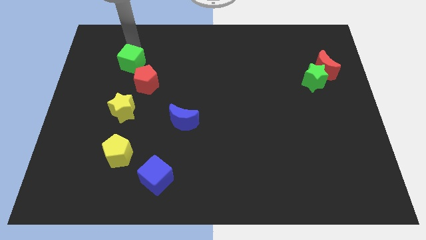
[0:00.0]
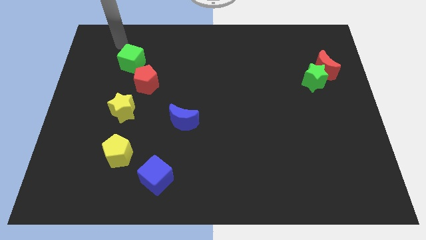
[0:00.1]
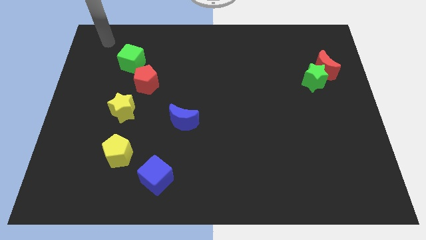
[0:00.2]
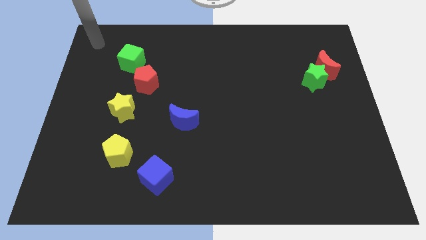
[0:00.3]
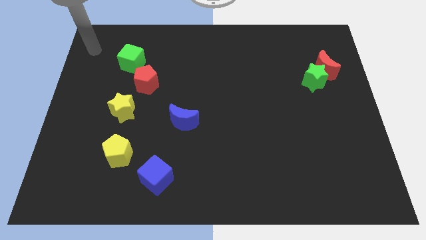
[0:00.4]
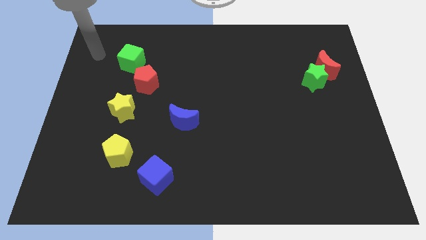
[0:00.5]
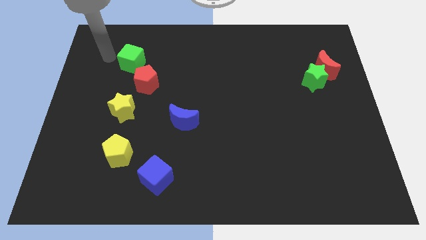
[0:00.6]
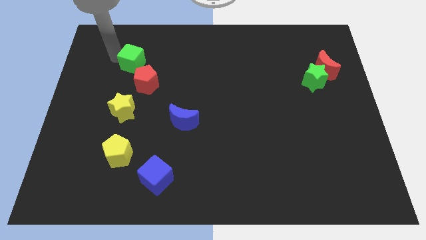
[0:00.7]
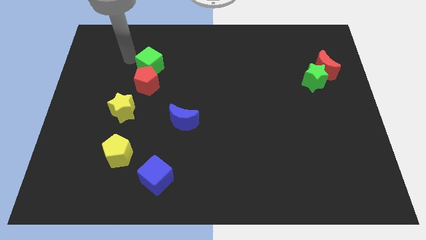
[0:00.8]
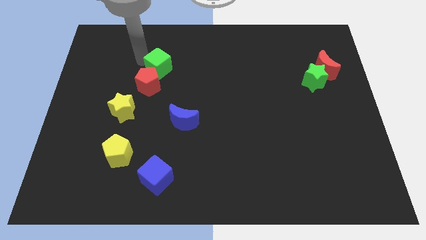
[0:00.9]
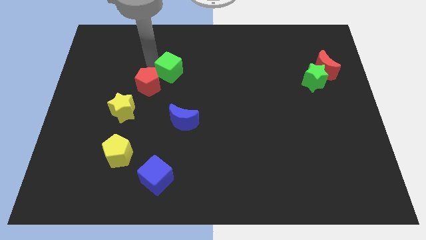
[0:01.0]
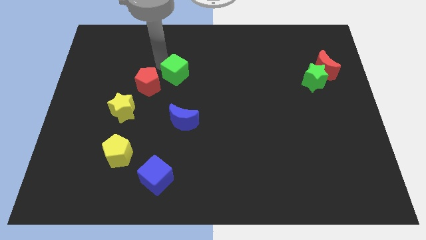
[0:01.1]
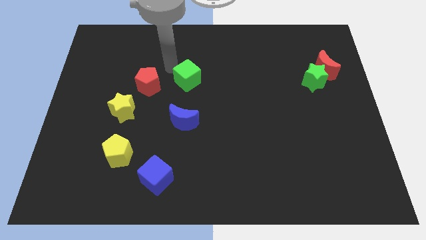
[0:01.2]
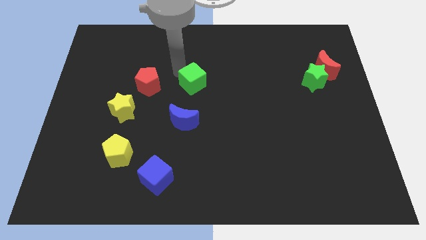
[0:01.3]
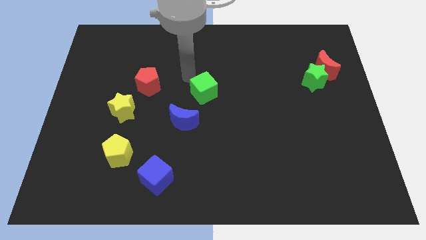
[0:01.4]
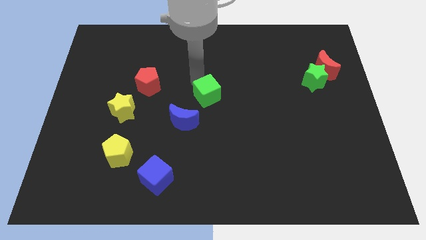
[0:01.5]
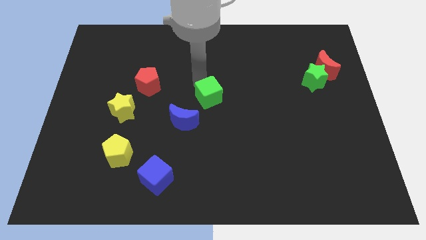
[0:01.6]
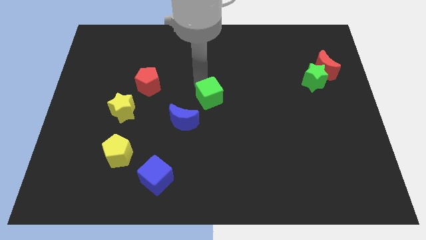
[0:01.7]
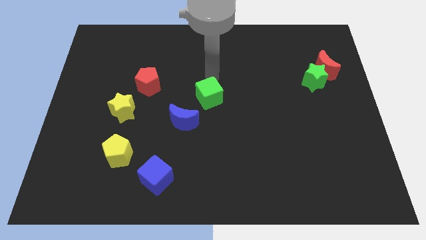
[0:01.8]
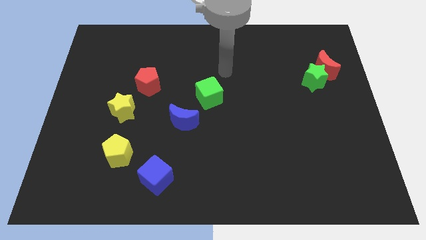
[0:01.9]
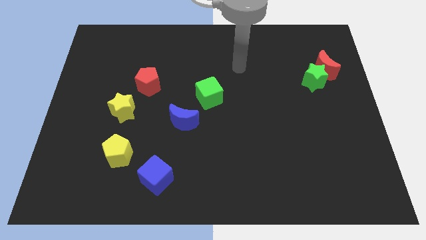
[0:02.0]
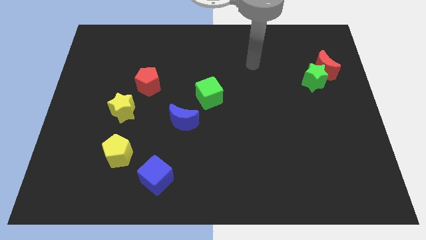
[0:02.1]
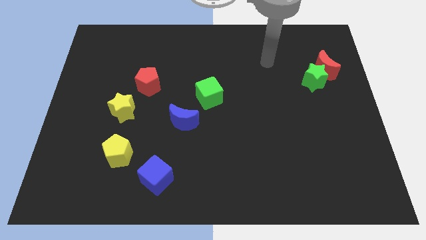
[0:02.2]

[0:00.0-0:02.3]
place green cube at center

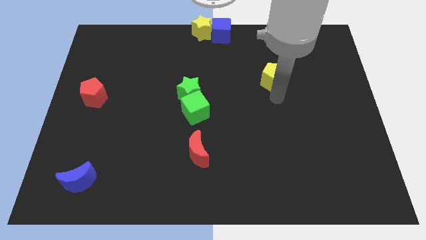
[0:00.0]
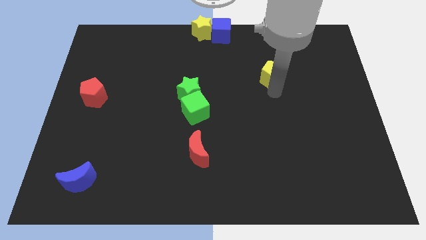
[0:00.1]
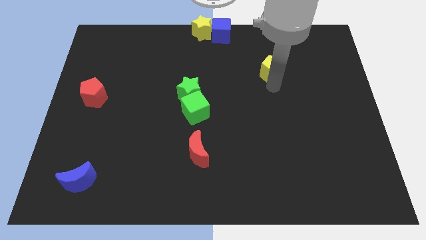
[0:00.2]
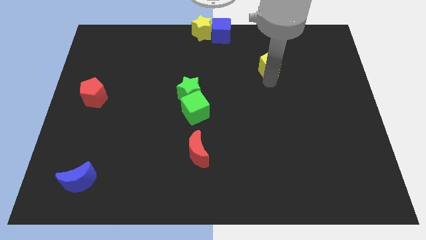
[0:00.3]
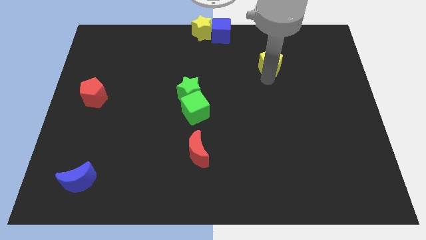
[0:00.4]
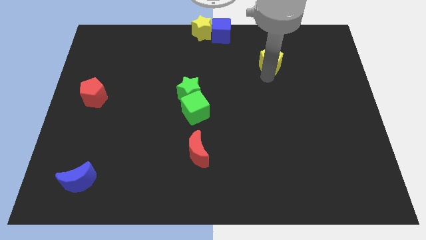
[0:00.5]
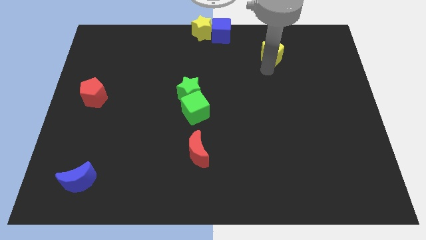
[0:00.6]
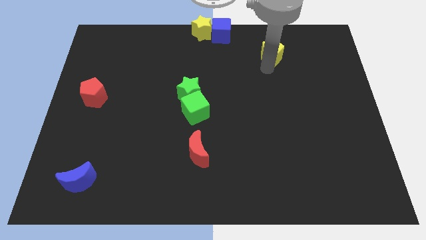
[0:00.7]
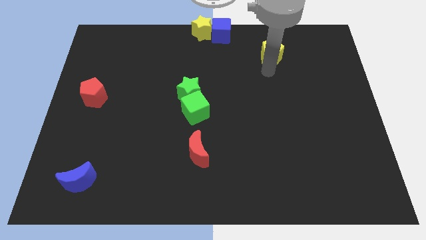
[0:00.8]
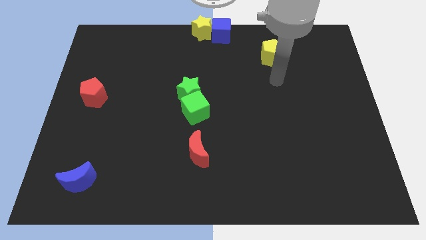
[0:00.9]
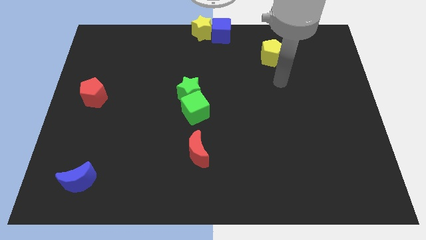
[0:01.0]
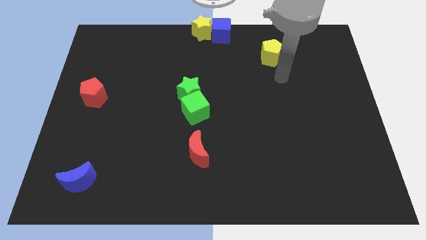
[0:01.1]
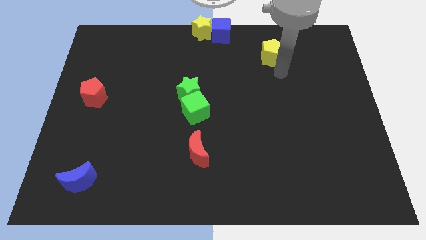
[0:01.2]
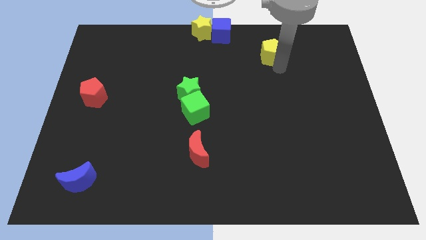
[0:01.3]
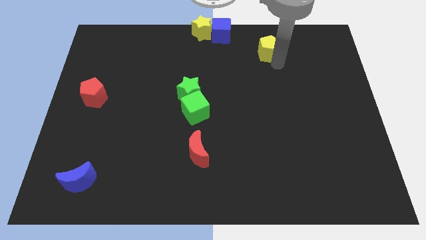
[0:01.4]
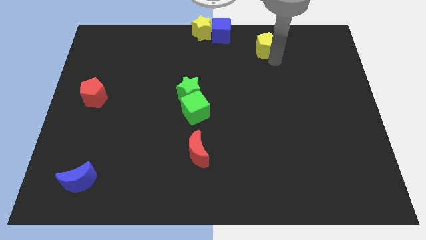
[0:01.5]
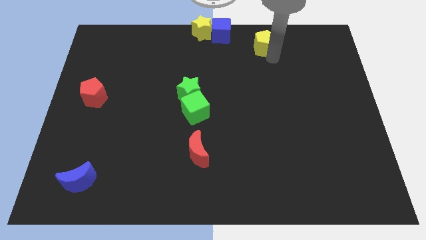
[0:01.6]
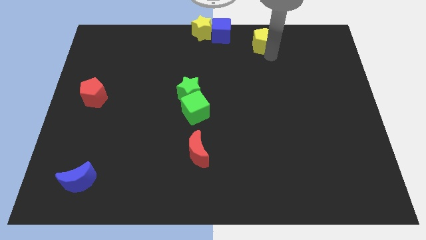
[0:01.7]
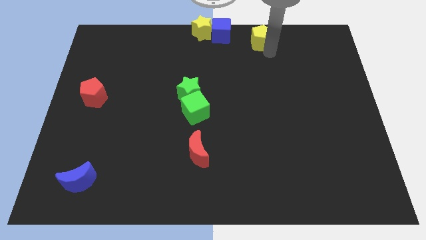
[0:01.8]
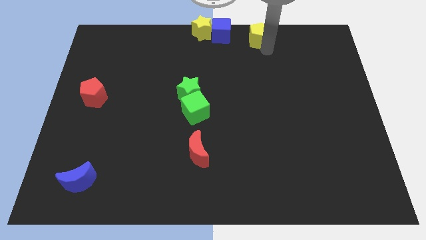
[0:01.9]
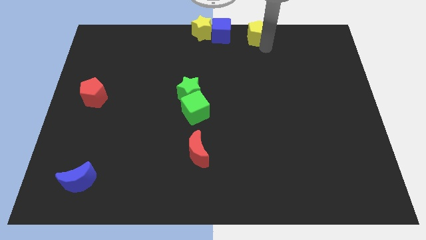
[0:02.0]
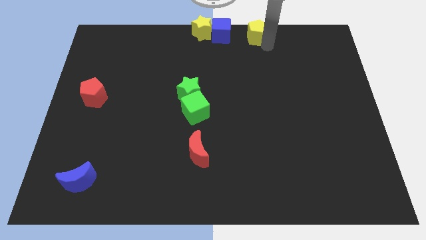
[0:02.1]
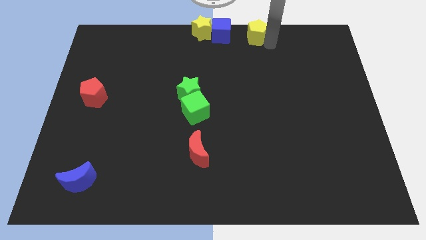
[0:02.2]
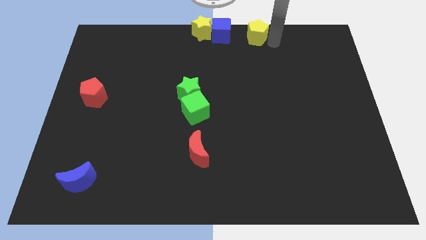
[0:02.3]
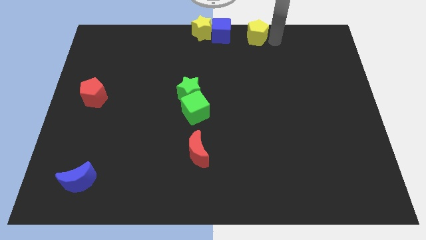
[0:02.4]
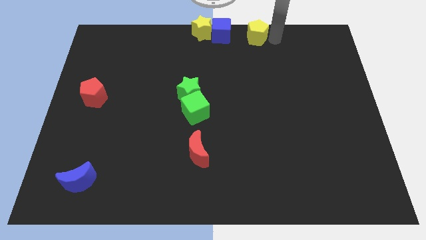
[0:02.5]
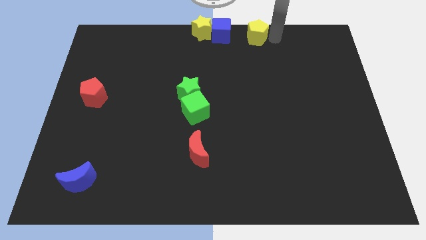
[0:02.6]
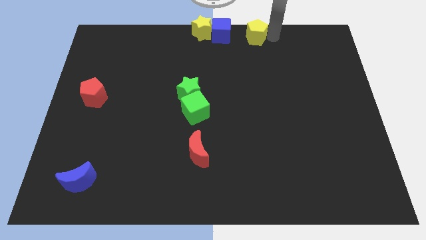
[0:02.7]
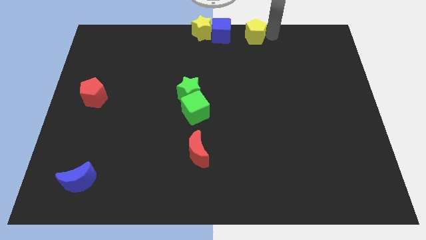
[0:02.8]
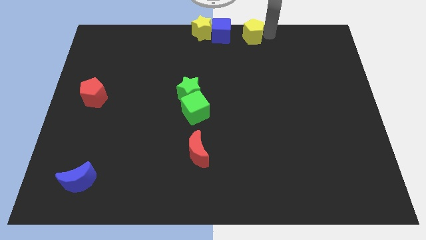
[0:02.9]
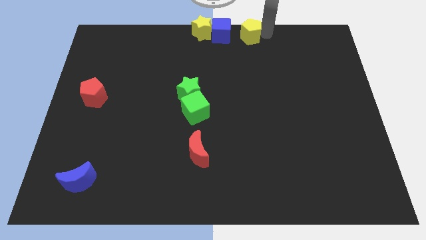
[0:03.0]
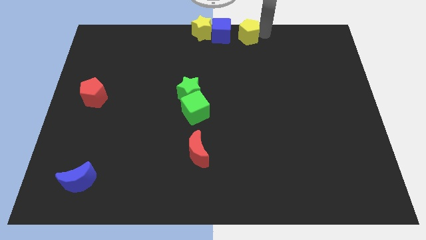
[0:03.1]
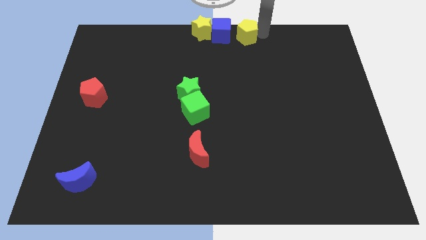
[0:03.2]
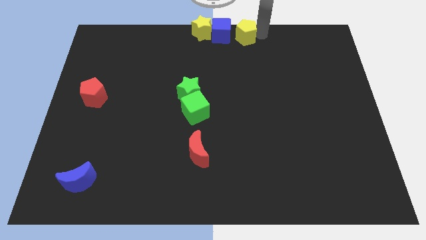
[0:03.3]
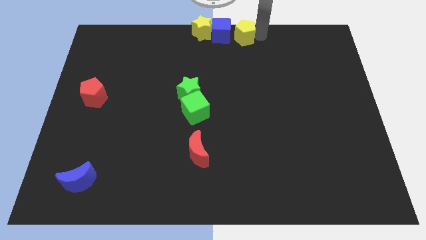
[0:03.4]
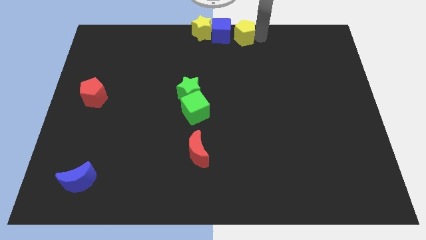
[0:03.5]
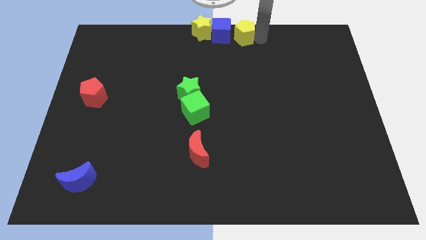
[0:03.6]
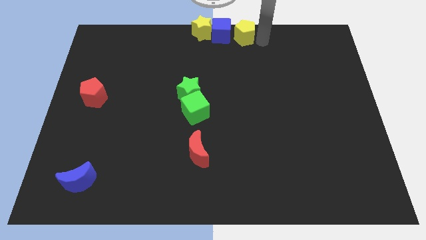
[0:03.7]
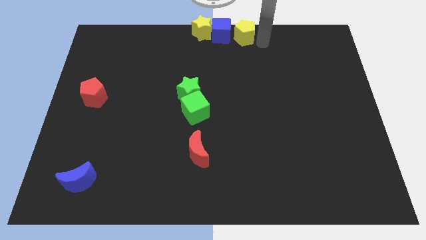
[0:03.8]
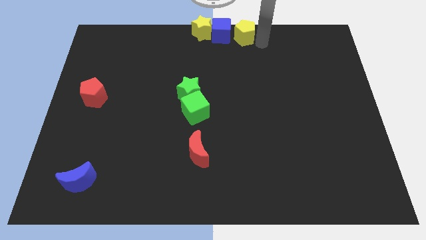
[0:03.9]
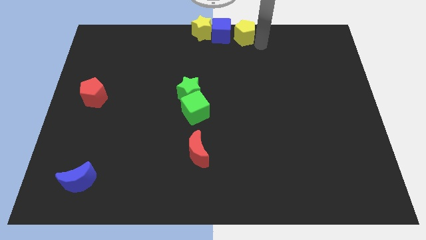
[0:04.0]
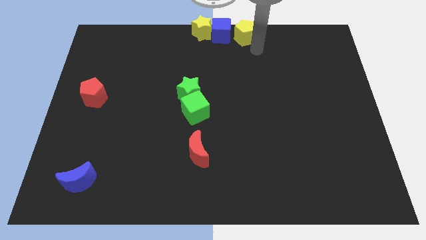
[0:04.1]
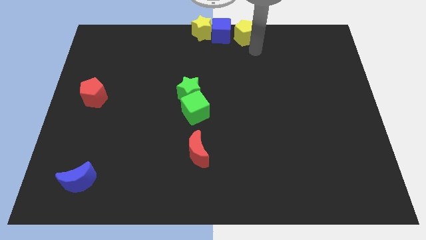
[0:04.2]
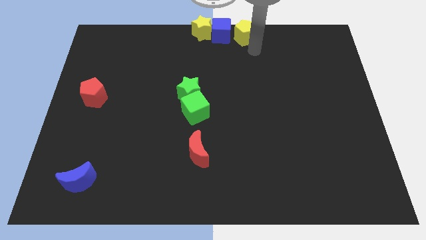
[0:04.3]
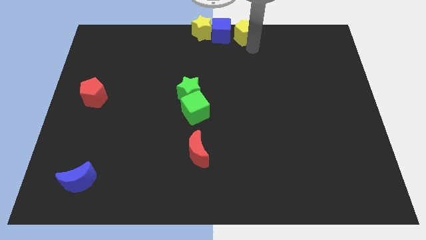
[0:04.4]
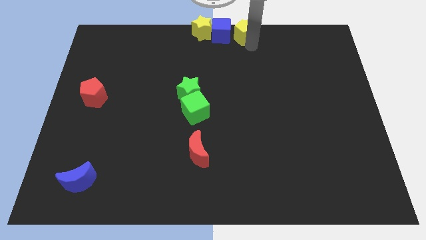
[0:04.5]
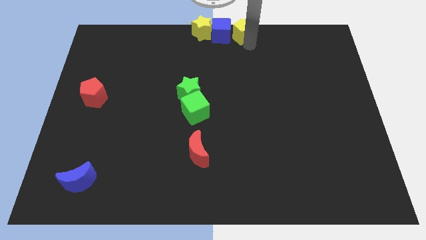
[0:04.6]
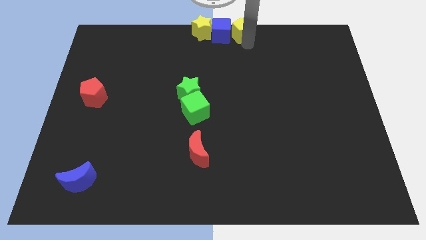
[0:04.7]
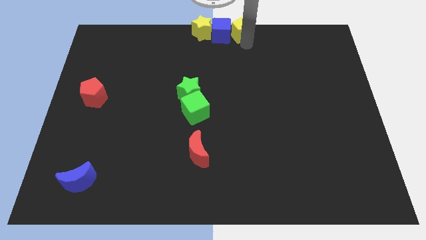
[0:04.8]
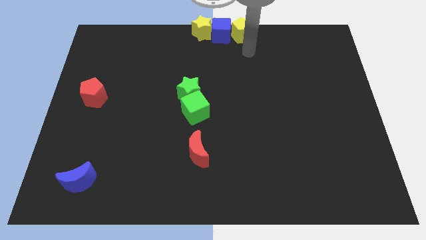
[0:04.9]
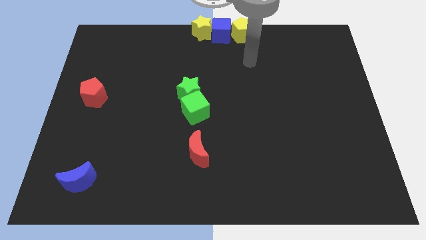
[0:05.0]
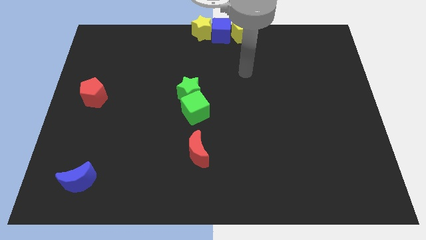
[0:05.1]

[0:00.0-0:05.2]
push the yellow pentagon to the right of the blue cube

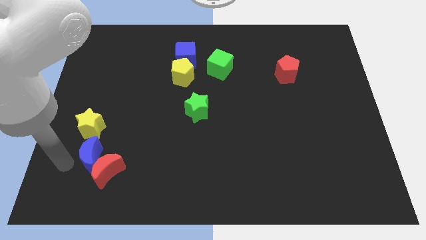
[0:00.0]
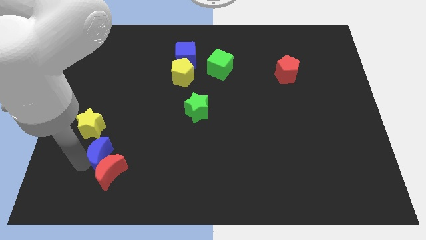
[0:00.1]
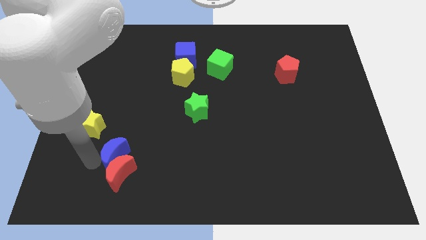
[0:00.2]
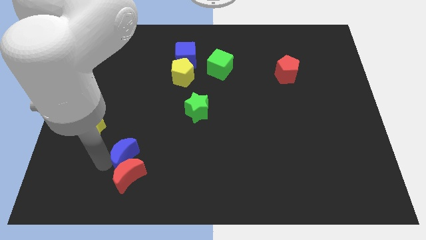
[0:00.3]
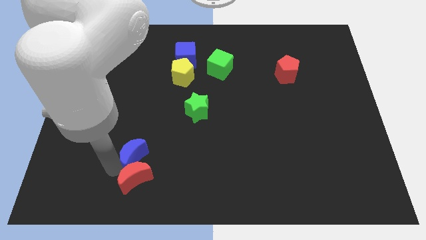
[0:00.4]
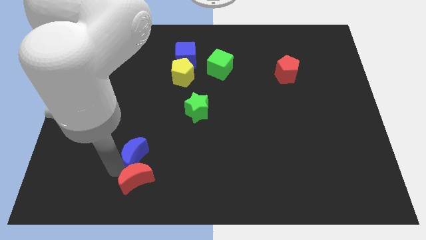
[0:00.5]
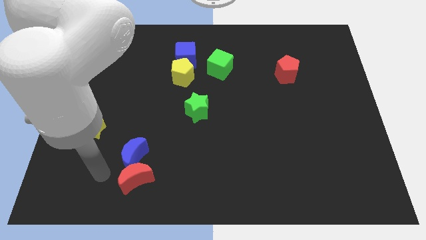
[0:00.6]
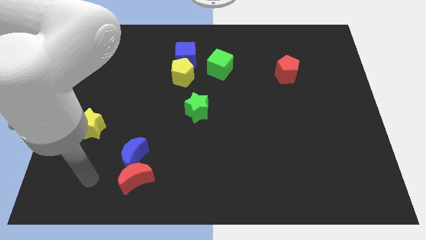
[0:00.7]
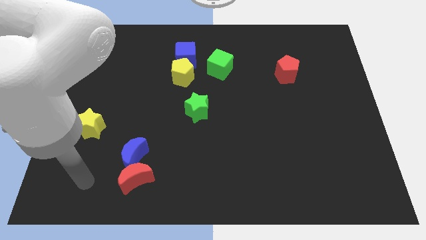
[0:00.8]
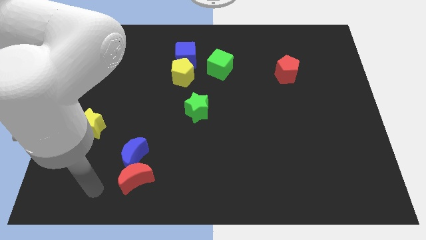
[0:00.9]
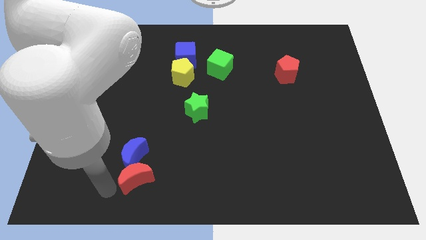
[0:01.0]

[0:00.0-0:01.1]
slide the red and blue crescents slightly to the right side of the board

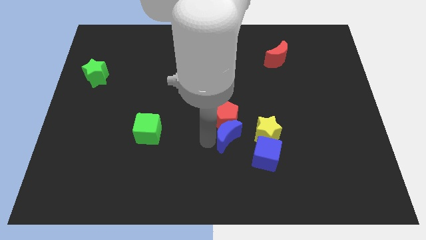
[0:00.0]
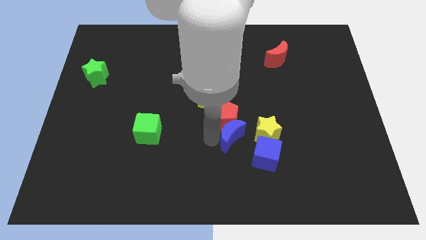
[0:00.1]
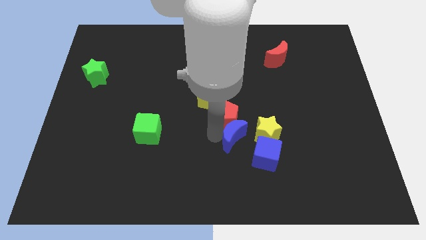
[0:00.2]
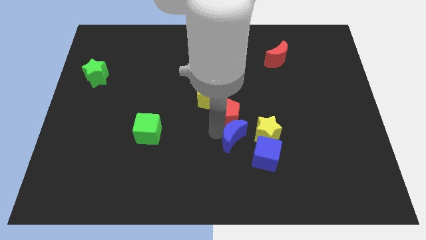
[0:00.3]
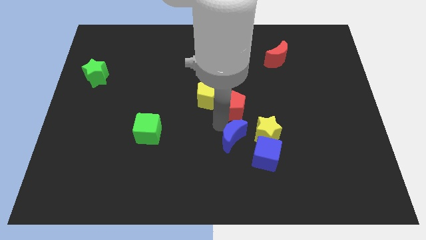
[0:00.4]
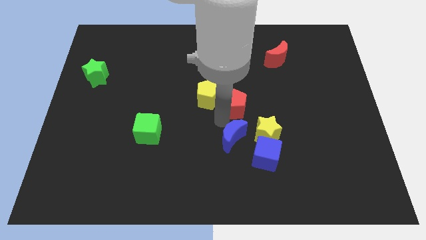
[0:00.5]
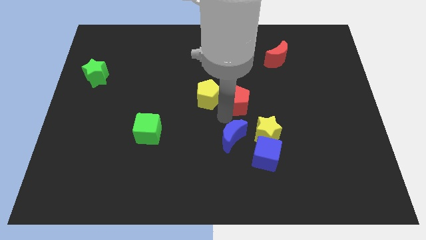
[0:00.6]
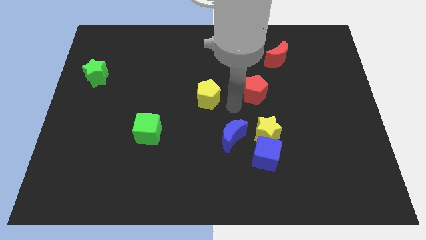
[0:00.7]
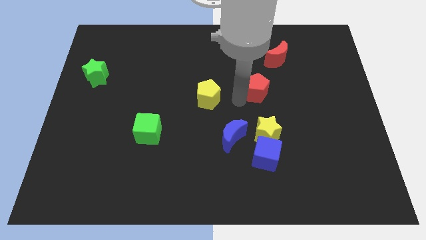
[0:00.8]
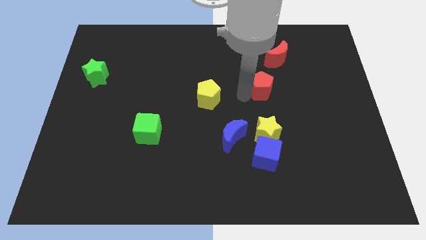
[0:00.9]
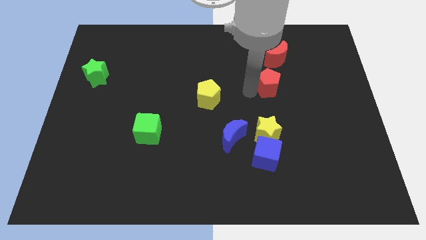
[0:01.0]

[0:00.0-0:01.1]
separate red pentagon from blue moon
